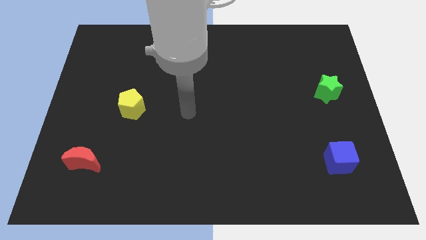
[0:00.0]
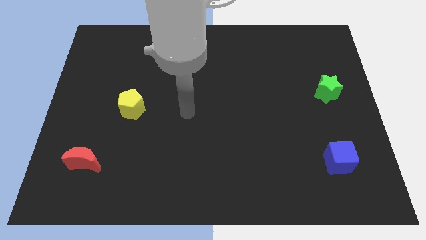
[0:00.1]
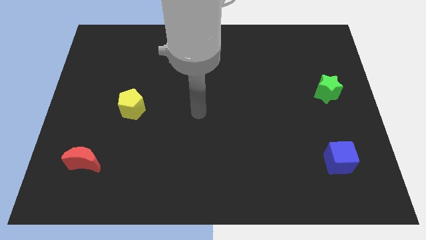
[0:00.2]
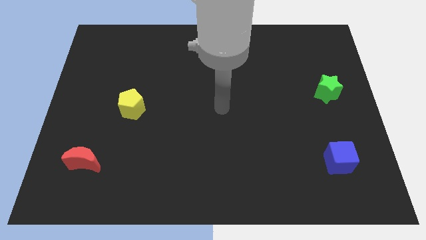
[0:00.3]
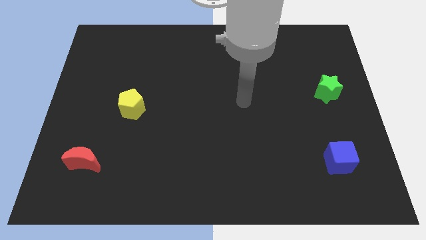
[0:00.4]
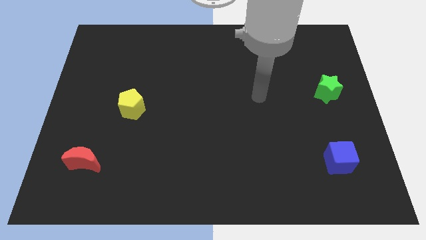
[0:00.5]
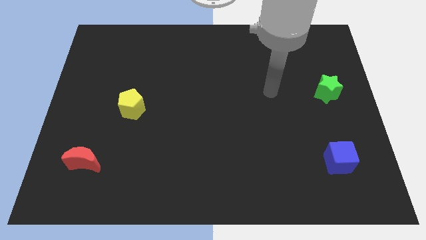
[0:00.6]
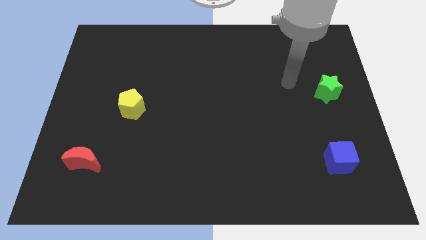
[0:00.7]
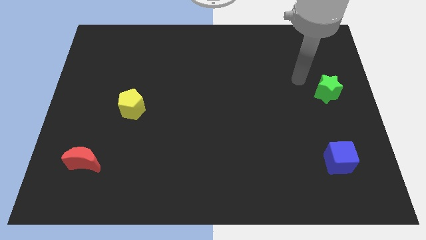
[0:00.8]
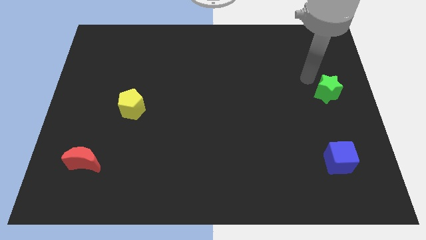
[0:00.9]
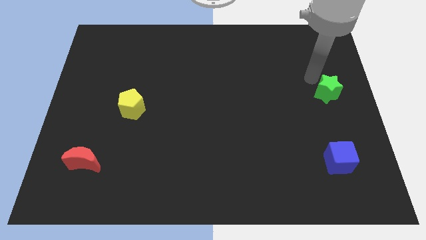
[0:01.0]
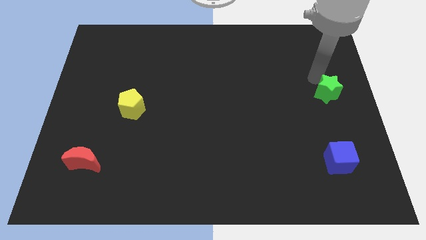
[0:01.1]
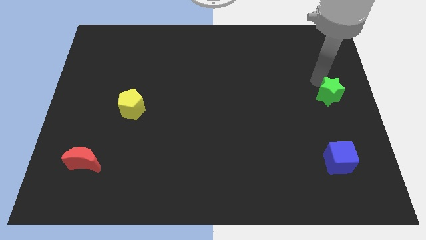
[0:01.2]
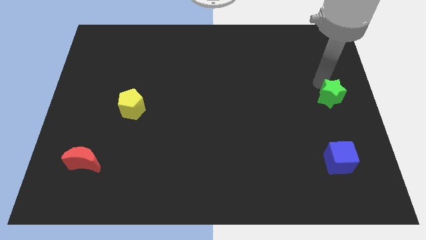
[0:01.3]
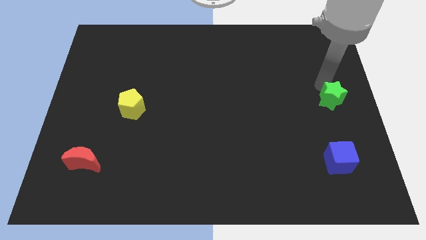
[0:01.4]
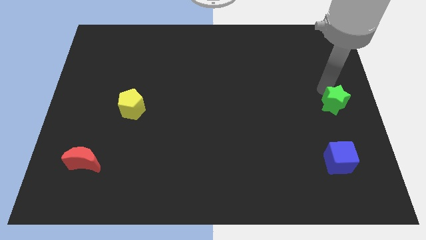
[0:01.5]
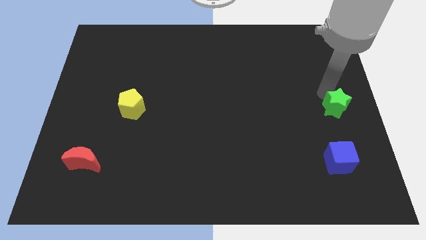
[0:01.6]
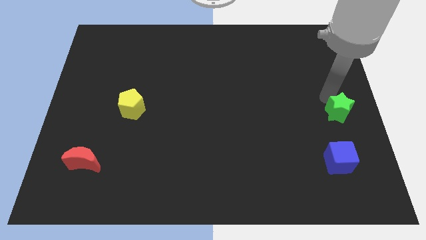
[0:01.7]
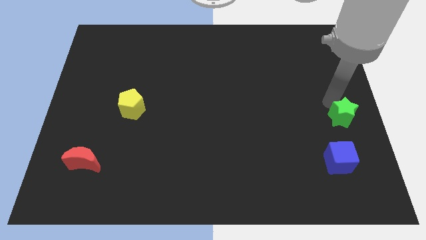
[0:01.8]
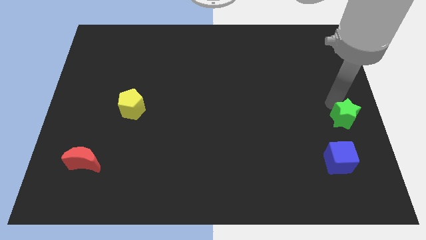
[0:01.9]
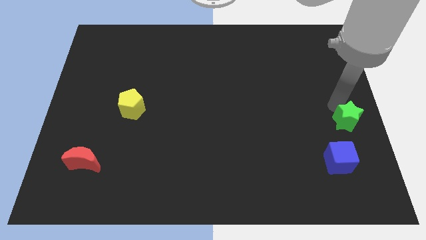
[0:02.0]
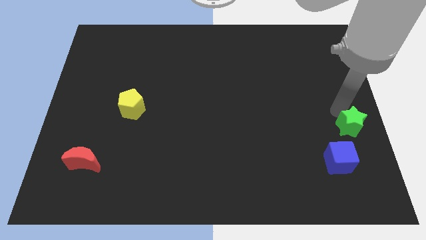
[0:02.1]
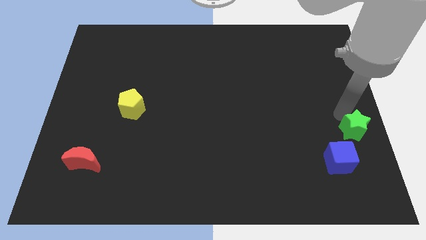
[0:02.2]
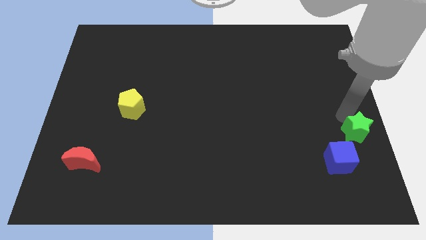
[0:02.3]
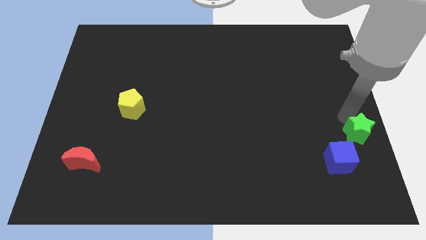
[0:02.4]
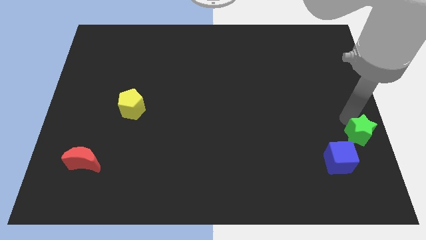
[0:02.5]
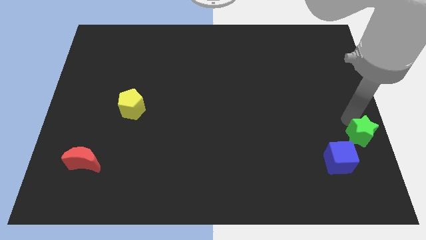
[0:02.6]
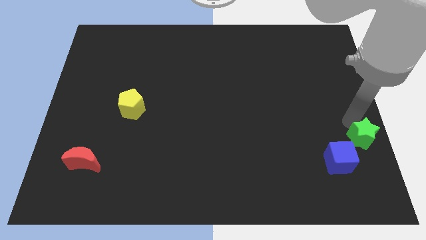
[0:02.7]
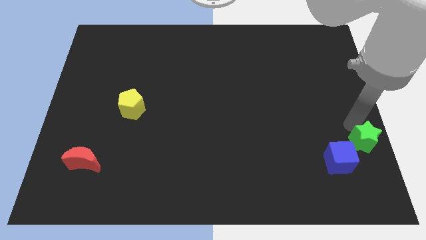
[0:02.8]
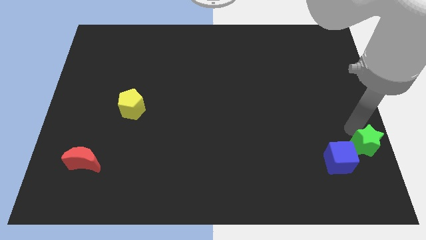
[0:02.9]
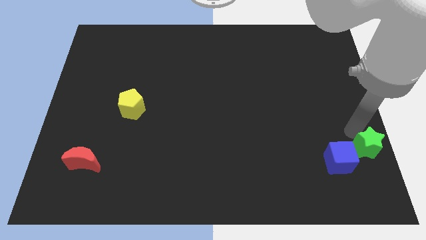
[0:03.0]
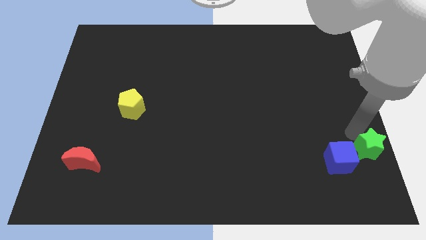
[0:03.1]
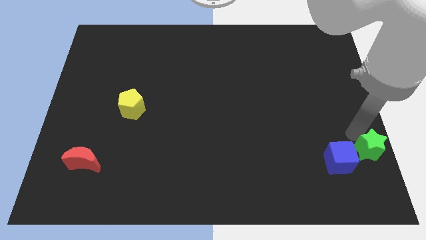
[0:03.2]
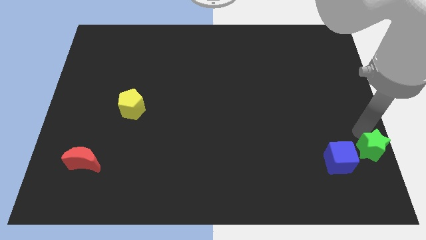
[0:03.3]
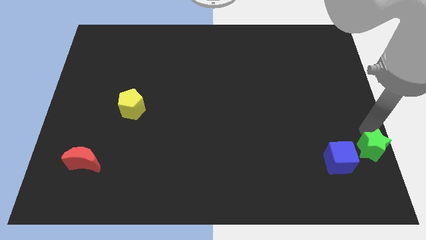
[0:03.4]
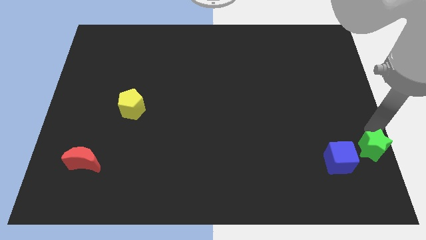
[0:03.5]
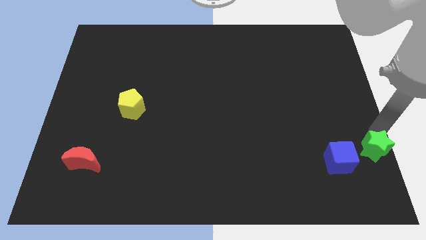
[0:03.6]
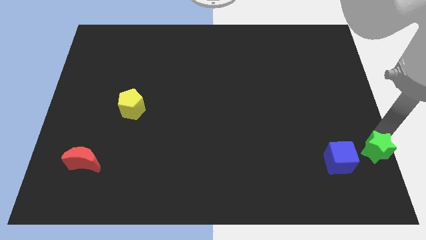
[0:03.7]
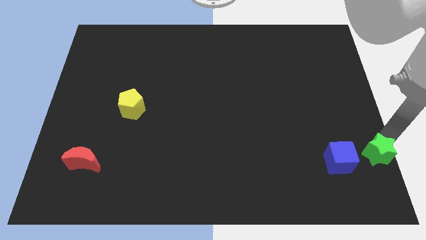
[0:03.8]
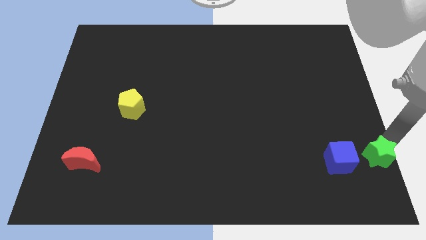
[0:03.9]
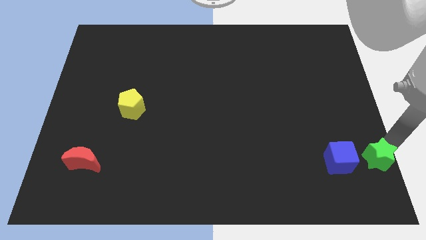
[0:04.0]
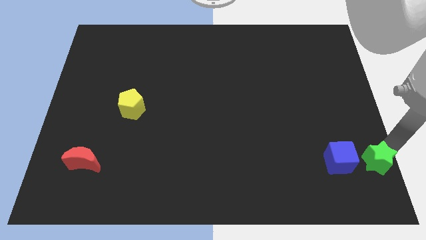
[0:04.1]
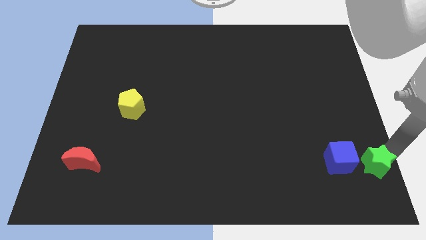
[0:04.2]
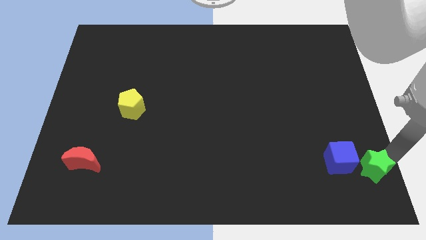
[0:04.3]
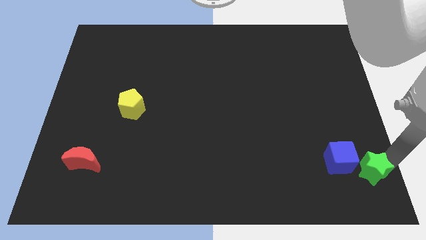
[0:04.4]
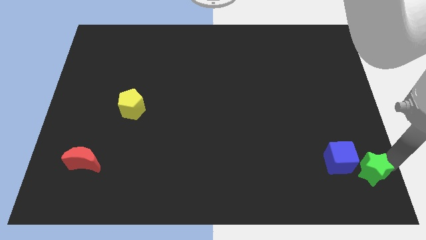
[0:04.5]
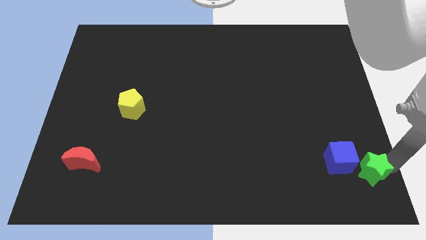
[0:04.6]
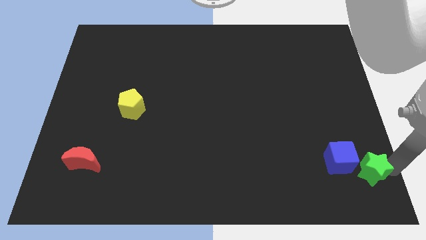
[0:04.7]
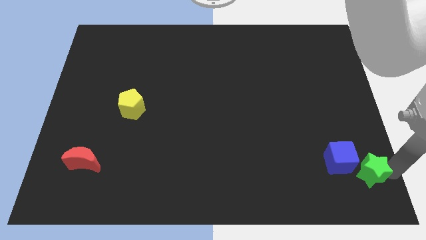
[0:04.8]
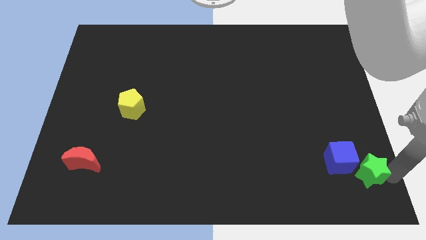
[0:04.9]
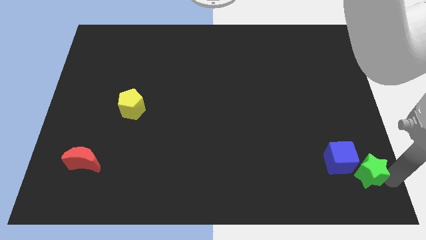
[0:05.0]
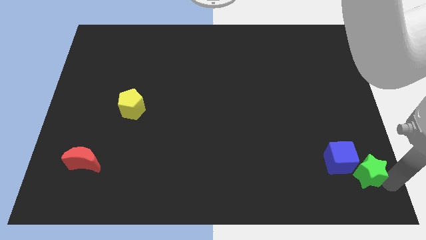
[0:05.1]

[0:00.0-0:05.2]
slide the green star to the blue cube

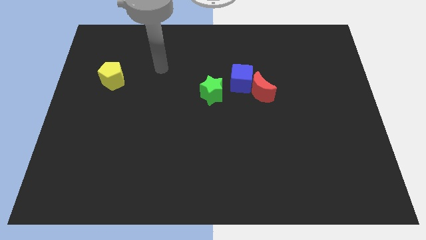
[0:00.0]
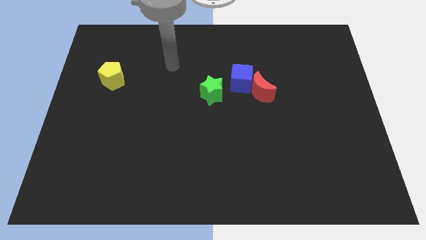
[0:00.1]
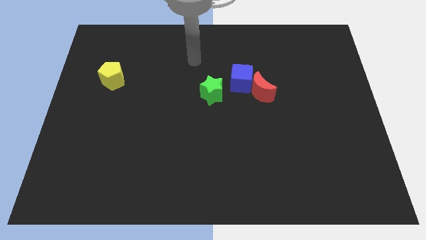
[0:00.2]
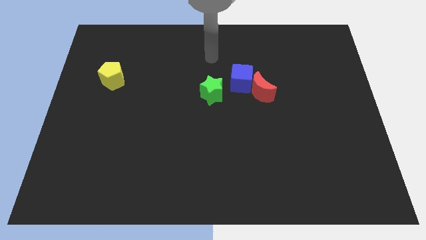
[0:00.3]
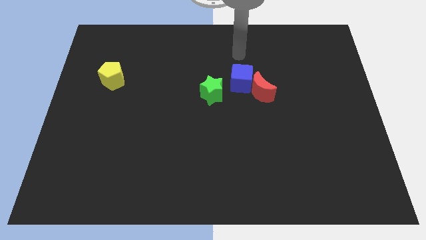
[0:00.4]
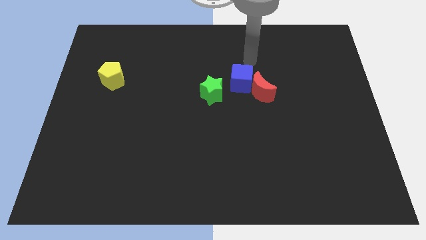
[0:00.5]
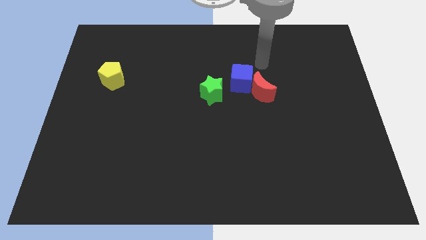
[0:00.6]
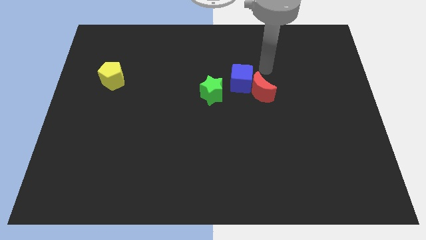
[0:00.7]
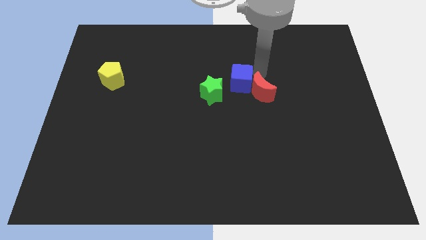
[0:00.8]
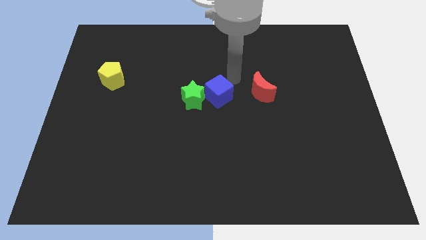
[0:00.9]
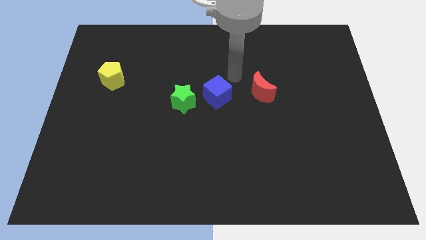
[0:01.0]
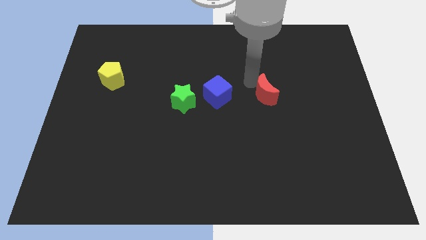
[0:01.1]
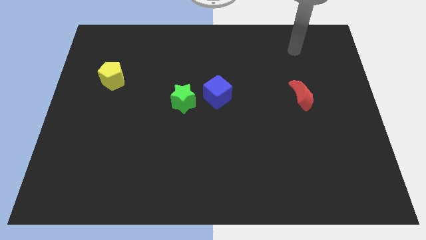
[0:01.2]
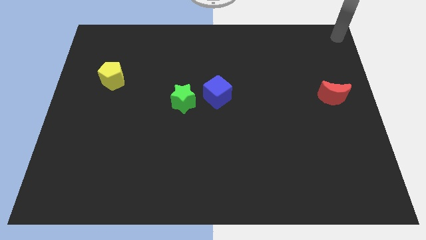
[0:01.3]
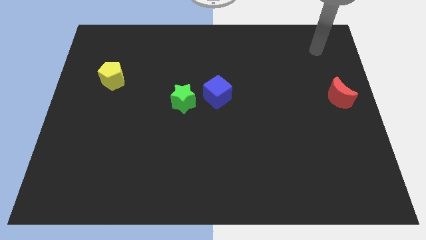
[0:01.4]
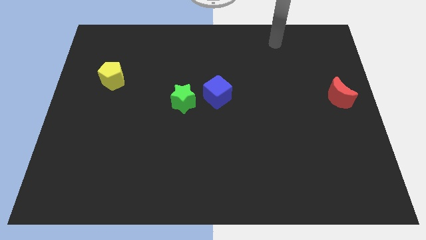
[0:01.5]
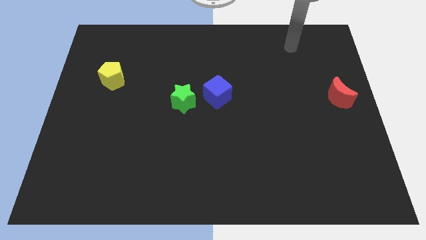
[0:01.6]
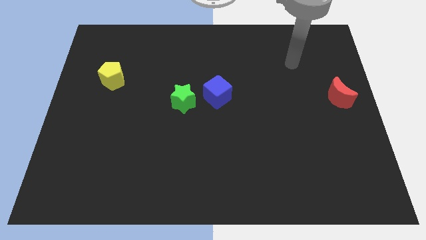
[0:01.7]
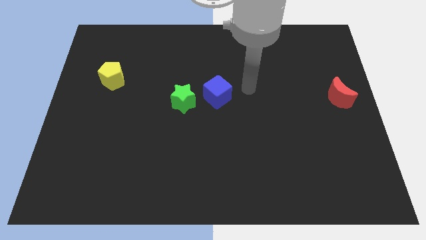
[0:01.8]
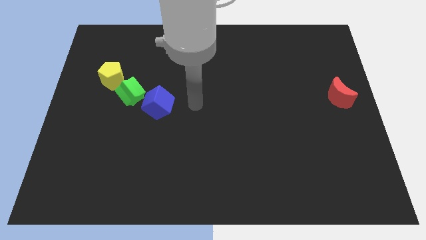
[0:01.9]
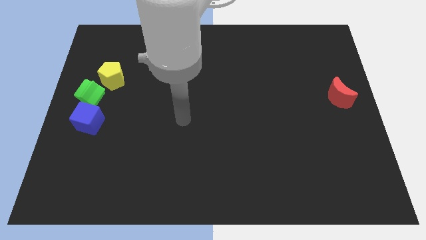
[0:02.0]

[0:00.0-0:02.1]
push the blue block close to the green block

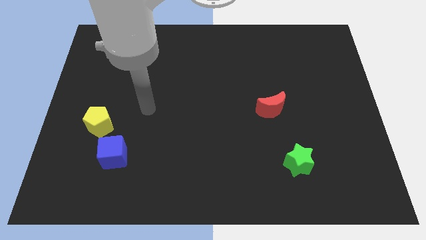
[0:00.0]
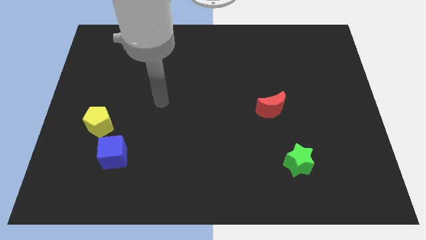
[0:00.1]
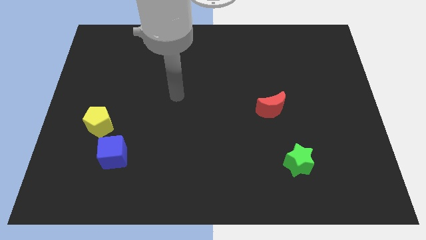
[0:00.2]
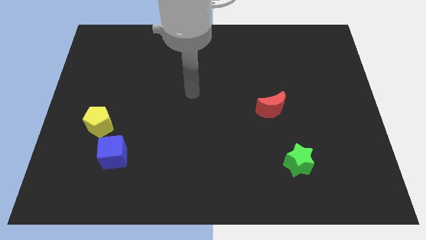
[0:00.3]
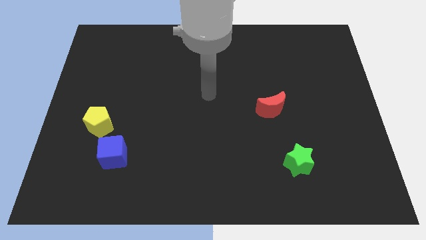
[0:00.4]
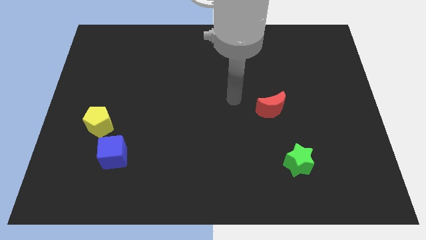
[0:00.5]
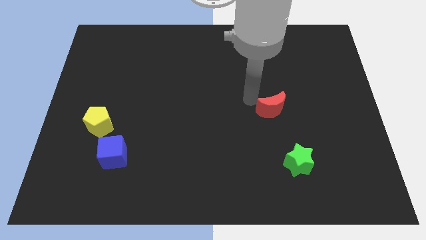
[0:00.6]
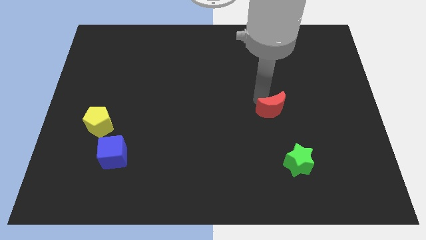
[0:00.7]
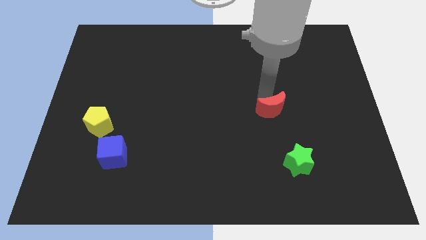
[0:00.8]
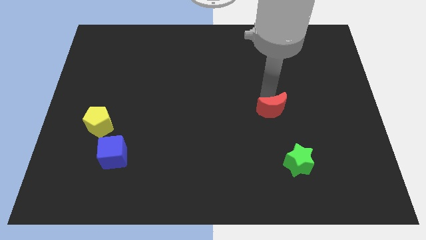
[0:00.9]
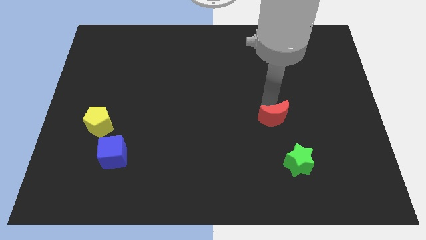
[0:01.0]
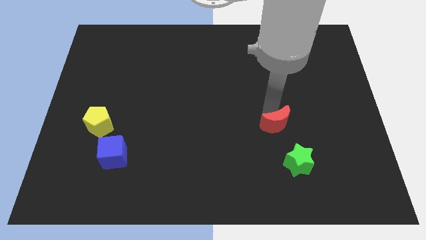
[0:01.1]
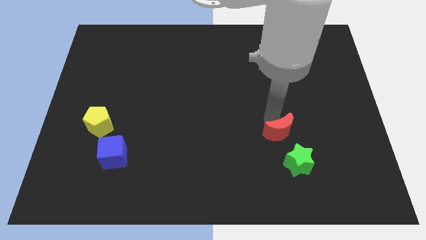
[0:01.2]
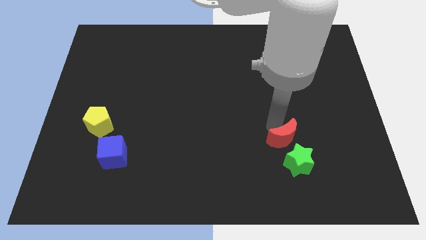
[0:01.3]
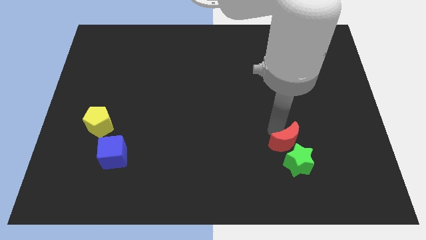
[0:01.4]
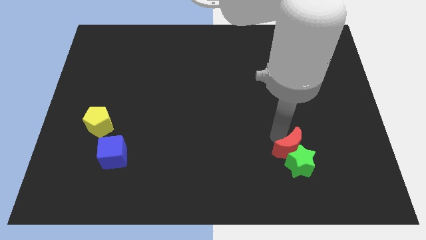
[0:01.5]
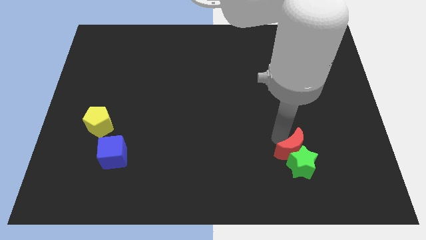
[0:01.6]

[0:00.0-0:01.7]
push the red block next to the star
